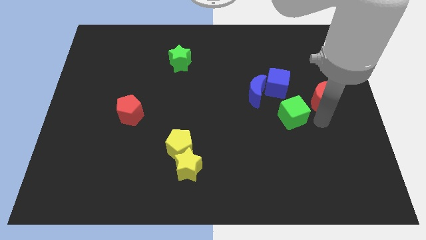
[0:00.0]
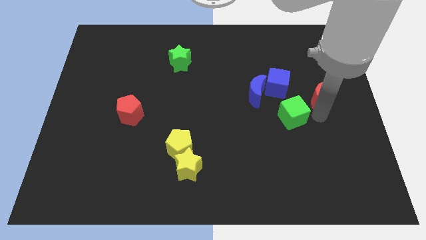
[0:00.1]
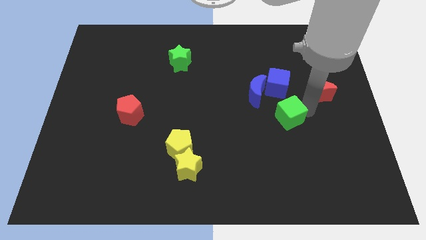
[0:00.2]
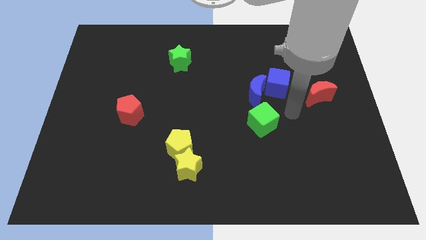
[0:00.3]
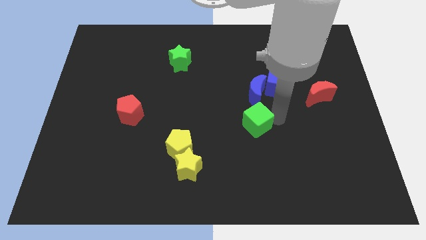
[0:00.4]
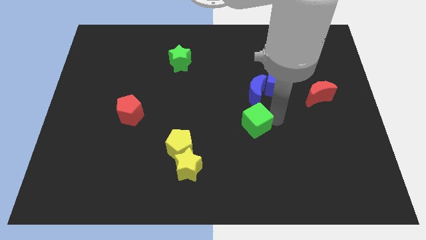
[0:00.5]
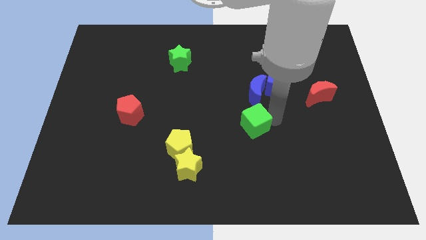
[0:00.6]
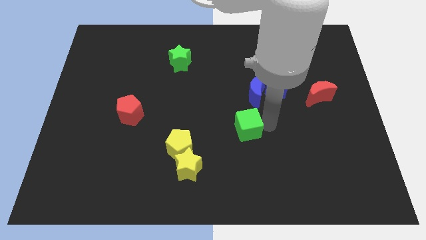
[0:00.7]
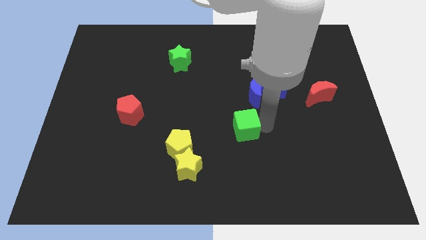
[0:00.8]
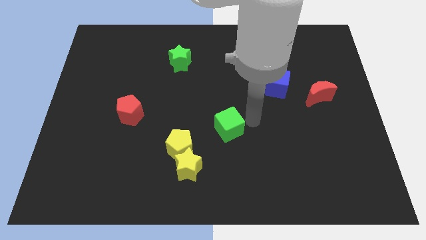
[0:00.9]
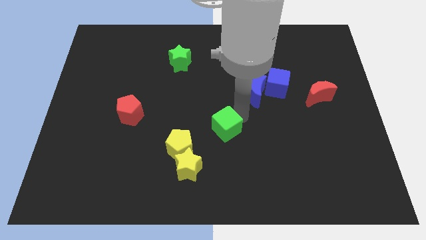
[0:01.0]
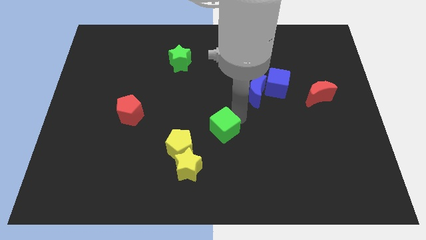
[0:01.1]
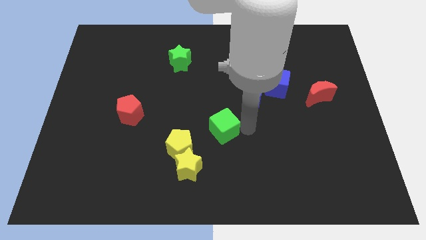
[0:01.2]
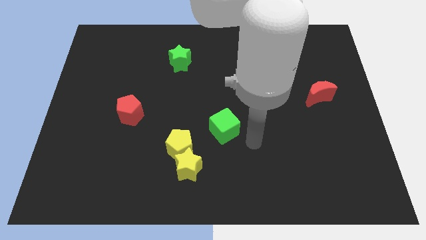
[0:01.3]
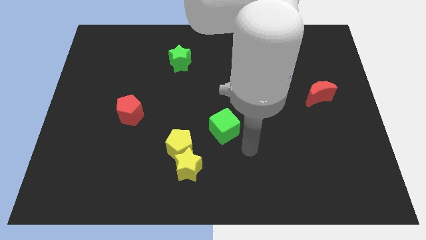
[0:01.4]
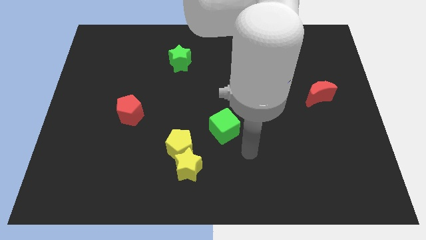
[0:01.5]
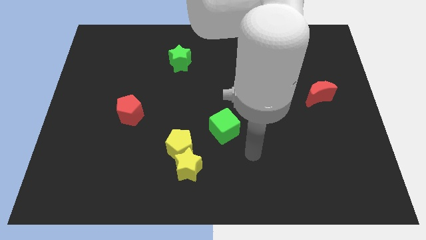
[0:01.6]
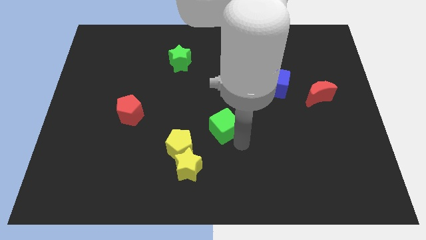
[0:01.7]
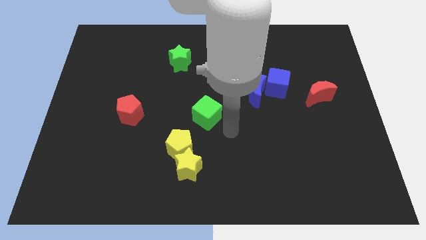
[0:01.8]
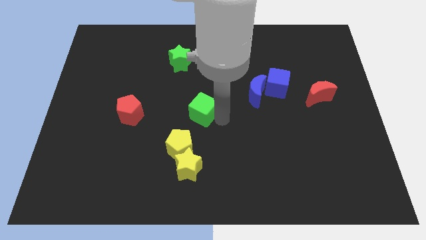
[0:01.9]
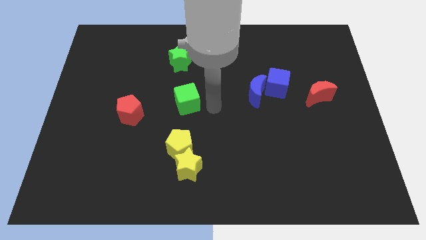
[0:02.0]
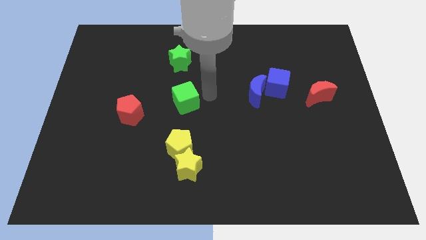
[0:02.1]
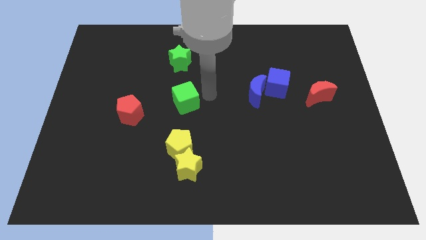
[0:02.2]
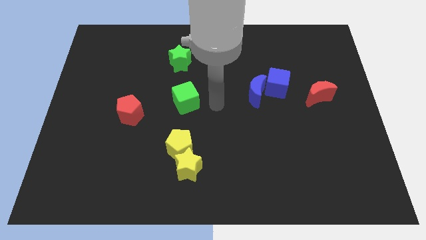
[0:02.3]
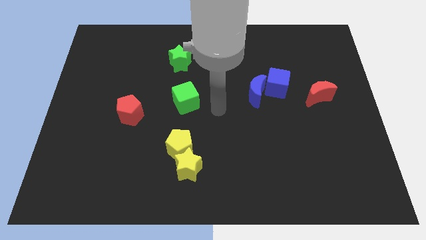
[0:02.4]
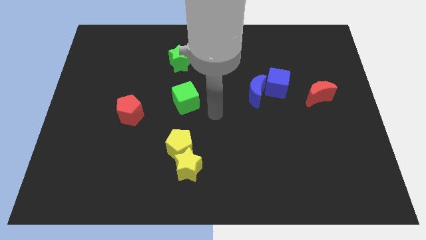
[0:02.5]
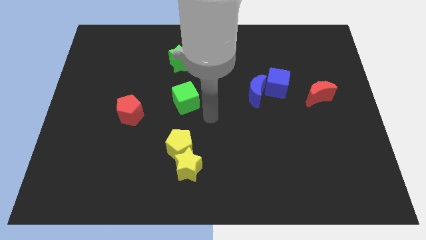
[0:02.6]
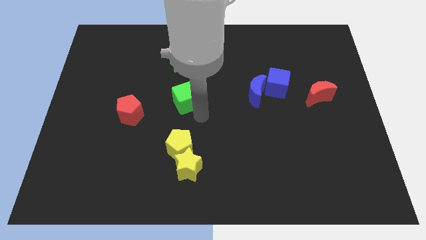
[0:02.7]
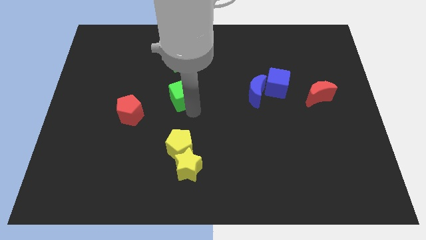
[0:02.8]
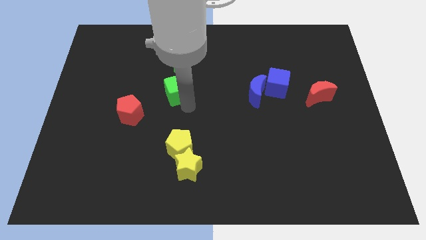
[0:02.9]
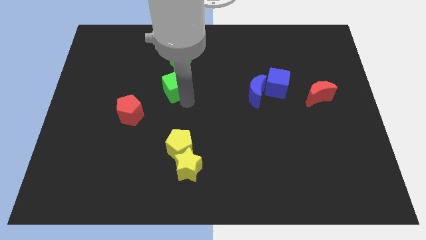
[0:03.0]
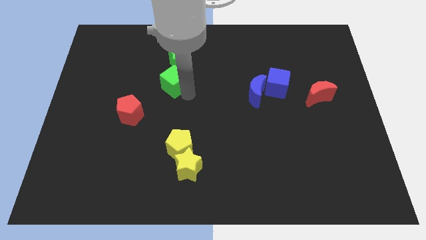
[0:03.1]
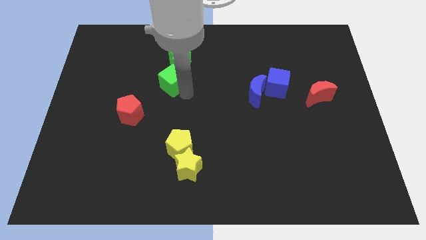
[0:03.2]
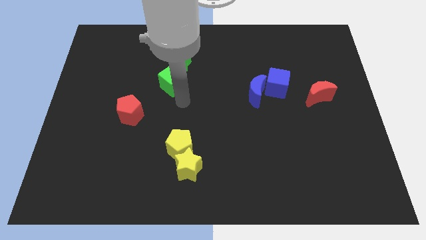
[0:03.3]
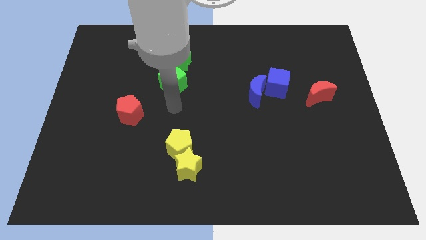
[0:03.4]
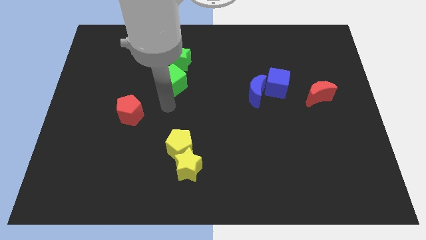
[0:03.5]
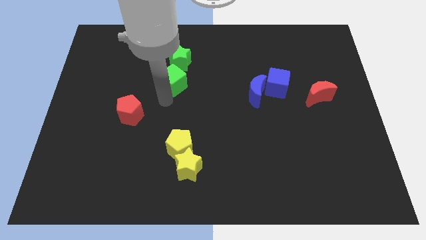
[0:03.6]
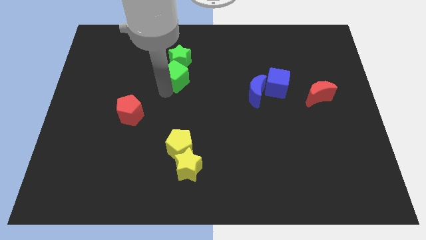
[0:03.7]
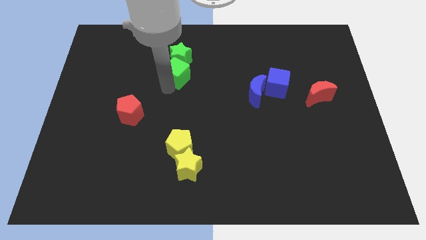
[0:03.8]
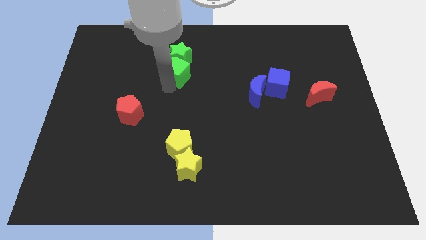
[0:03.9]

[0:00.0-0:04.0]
move the green cube into the green star

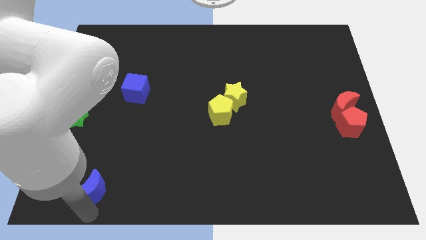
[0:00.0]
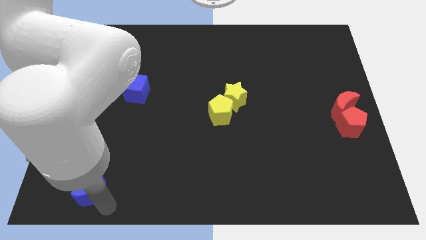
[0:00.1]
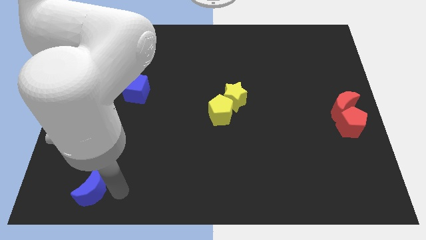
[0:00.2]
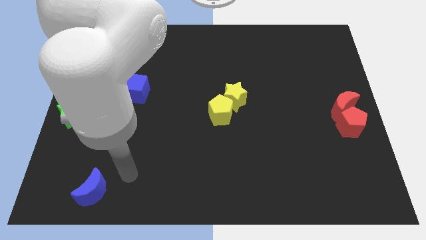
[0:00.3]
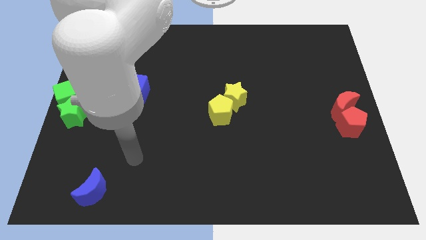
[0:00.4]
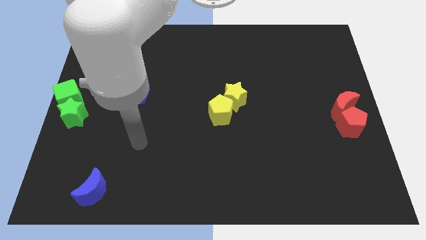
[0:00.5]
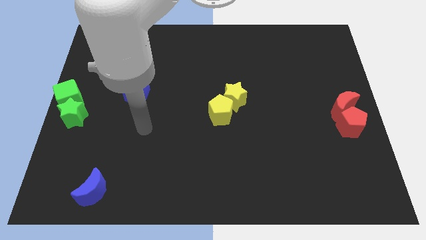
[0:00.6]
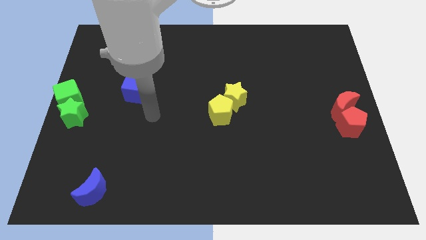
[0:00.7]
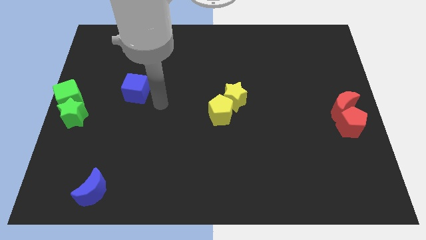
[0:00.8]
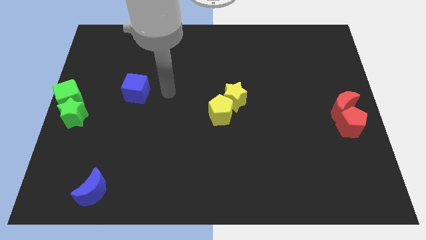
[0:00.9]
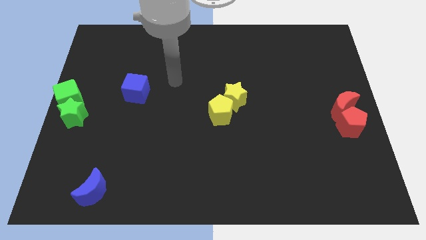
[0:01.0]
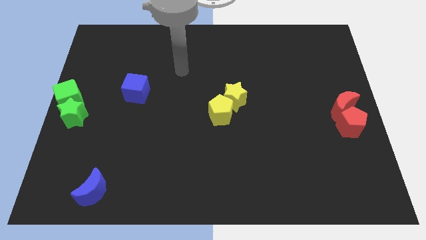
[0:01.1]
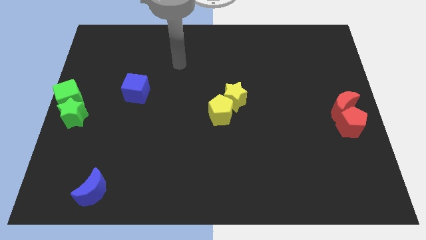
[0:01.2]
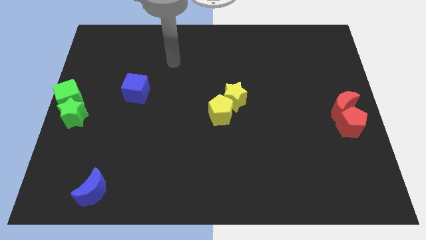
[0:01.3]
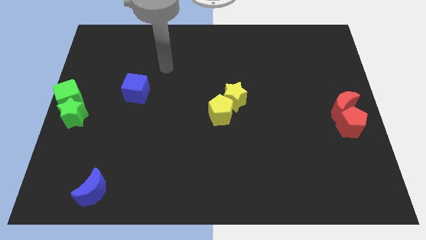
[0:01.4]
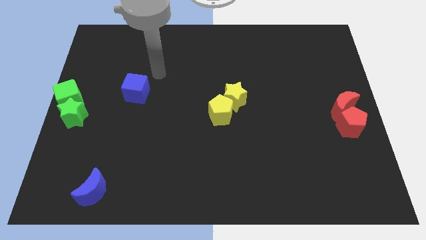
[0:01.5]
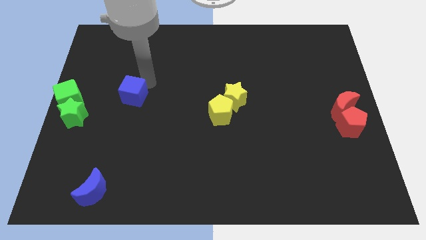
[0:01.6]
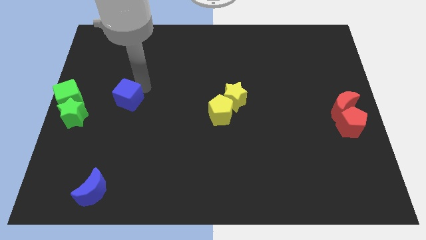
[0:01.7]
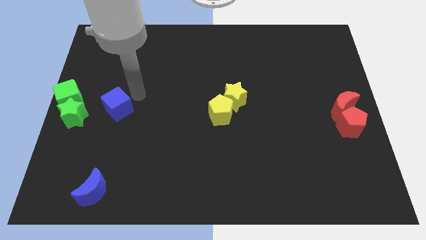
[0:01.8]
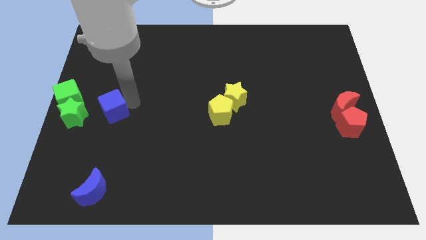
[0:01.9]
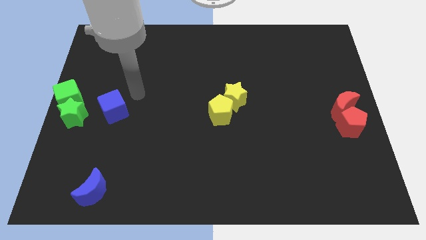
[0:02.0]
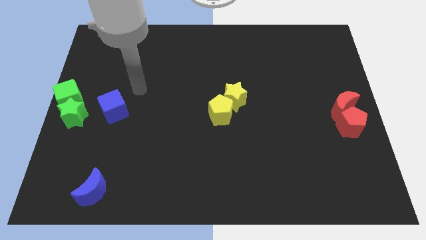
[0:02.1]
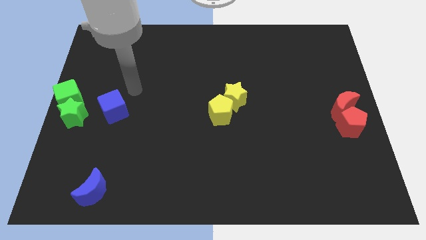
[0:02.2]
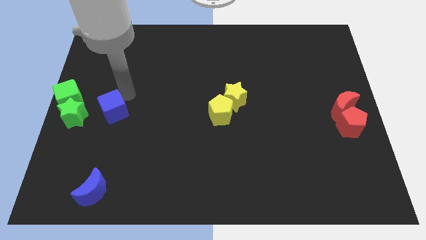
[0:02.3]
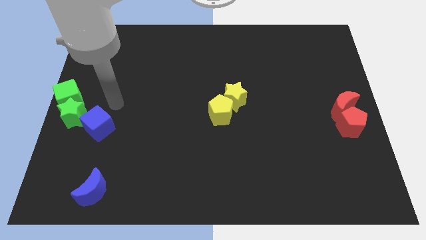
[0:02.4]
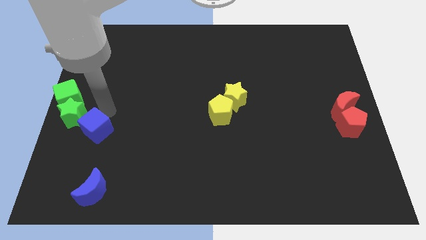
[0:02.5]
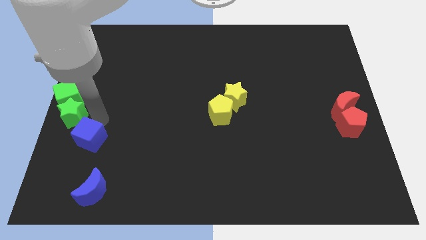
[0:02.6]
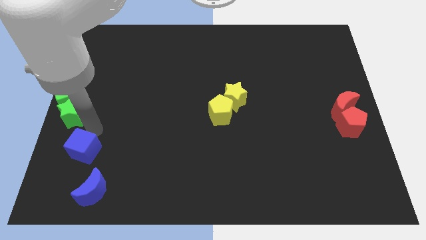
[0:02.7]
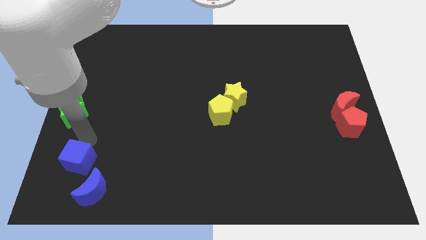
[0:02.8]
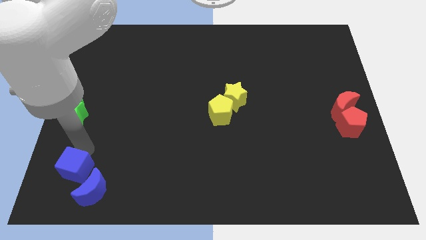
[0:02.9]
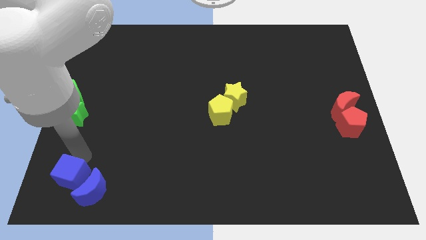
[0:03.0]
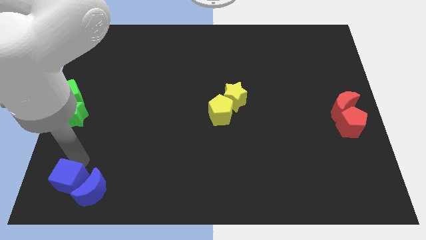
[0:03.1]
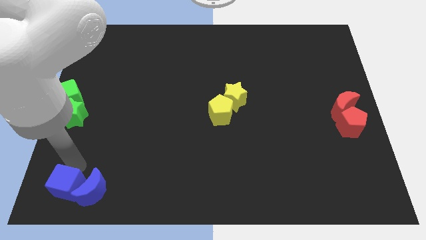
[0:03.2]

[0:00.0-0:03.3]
move the blue cube into the blue moon

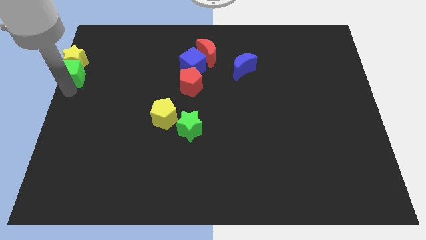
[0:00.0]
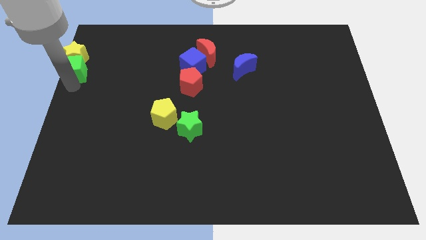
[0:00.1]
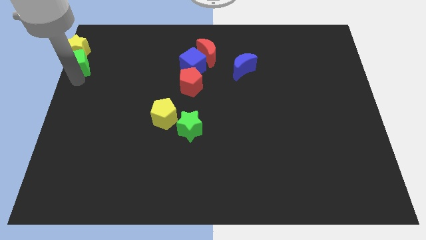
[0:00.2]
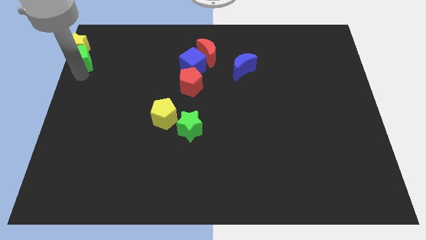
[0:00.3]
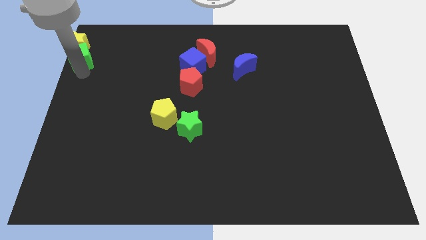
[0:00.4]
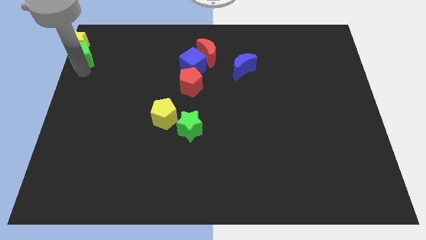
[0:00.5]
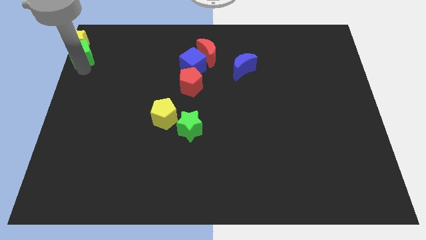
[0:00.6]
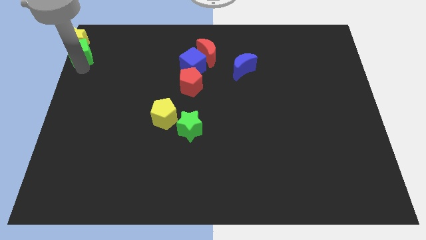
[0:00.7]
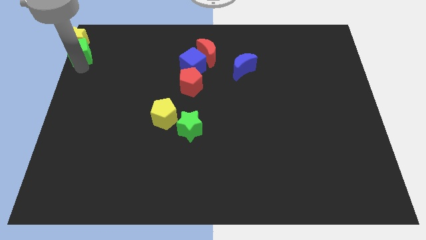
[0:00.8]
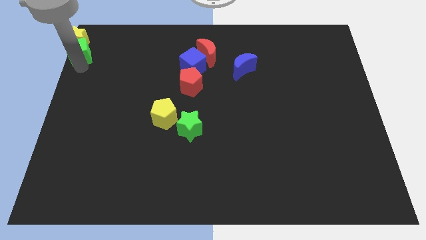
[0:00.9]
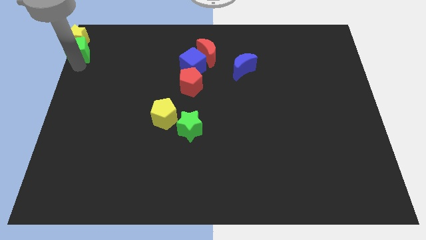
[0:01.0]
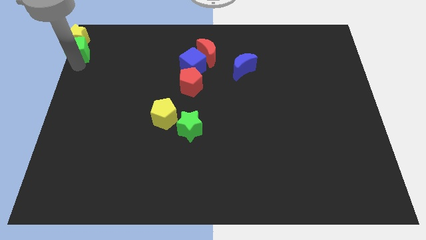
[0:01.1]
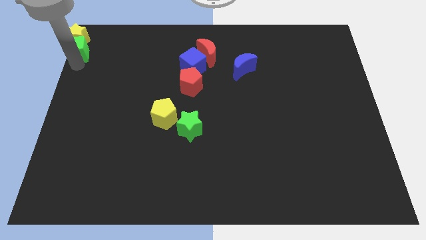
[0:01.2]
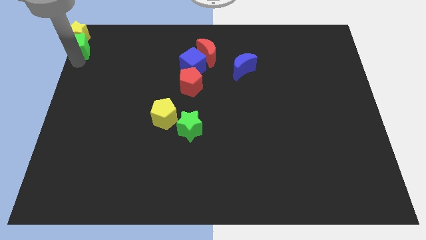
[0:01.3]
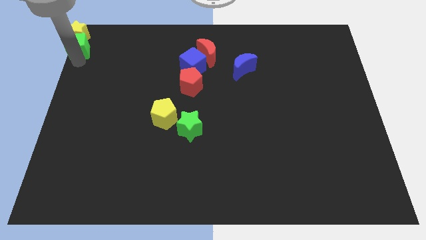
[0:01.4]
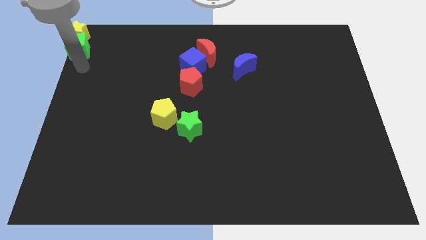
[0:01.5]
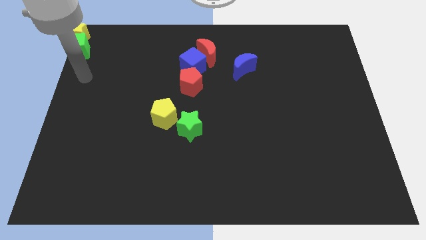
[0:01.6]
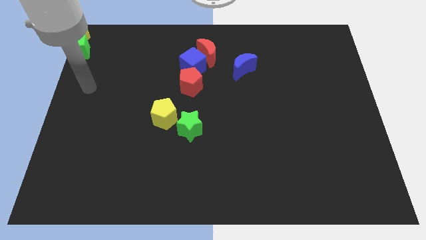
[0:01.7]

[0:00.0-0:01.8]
push the green cube along with the yellow star to the top left corner
